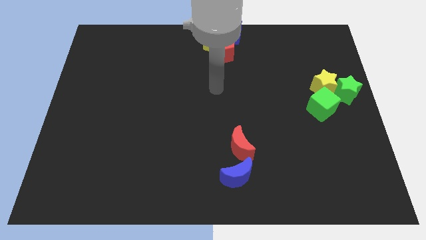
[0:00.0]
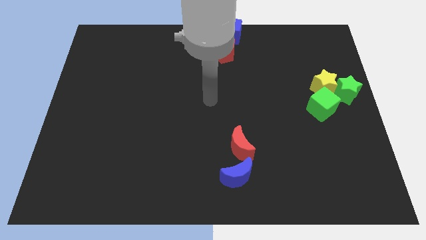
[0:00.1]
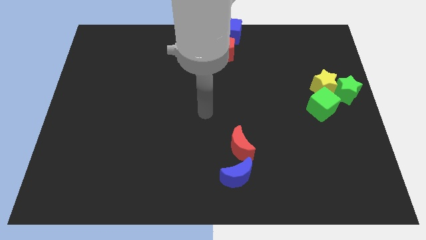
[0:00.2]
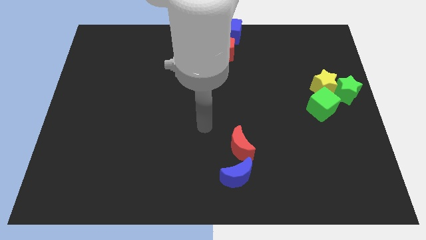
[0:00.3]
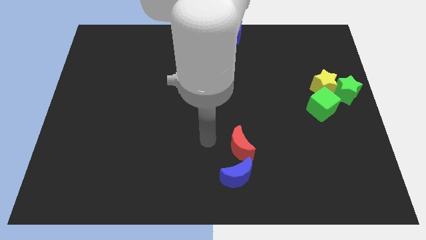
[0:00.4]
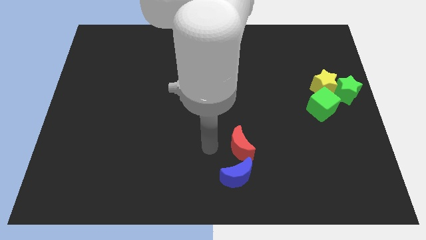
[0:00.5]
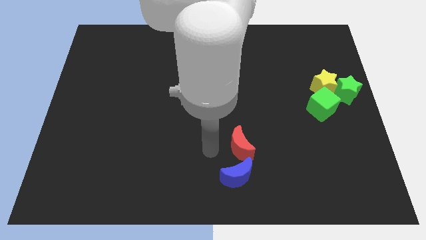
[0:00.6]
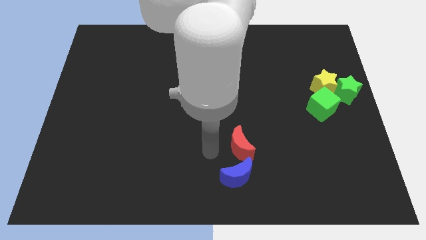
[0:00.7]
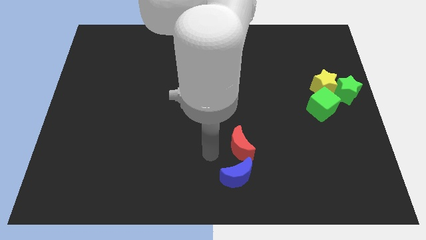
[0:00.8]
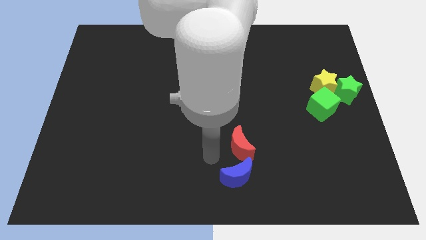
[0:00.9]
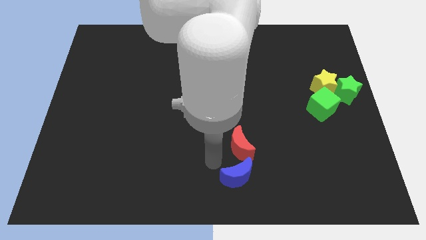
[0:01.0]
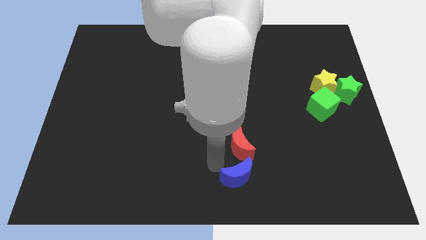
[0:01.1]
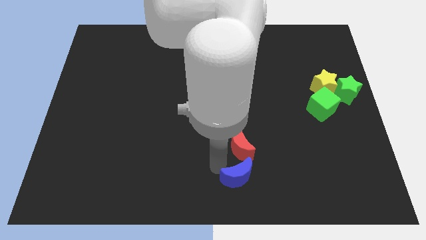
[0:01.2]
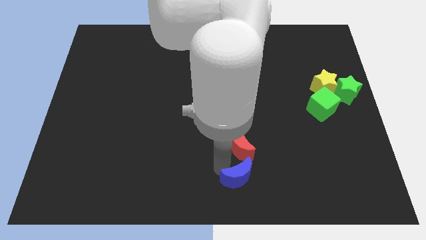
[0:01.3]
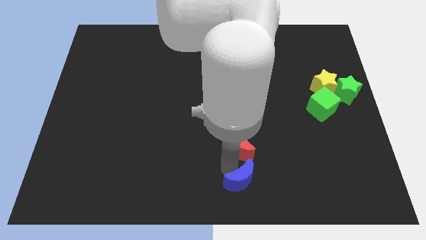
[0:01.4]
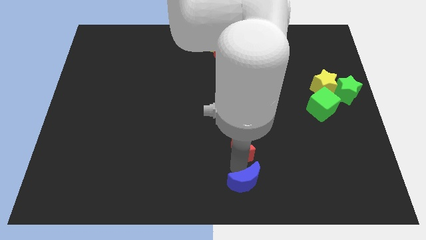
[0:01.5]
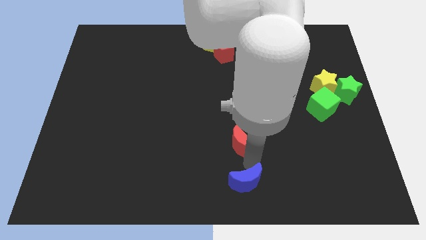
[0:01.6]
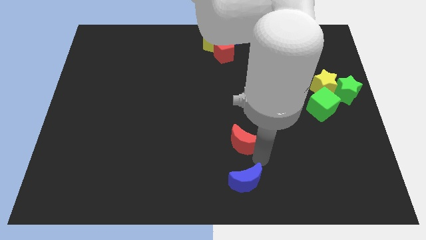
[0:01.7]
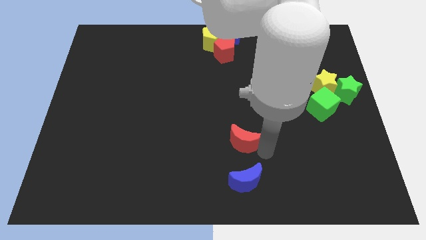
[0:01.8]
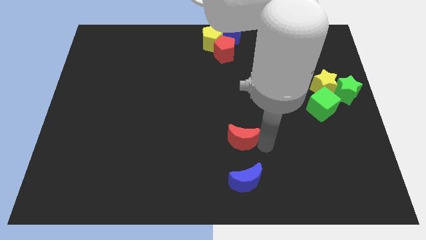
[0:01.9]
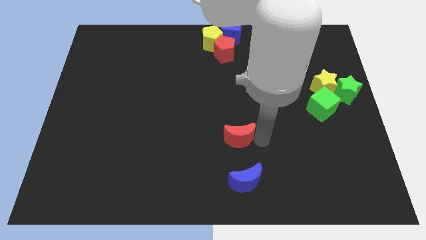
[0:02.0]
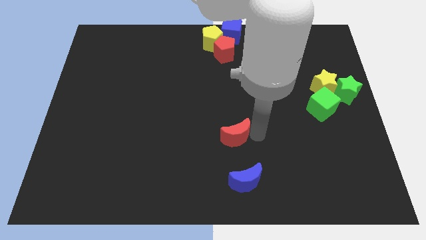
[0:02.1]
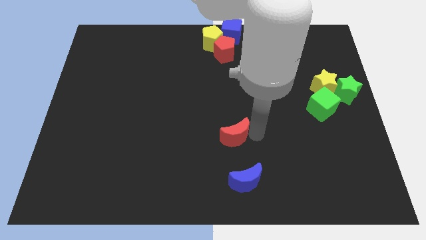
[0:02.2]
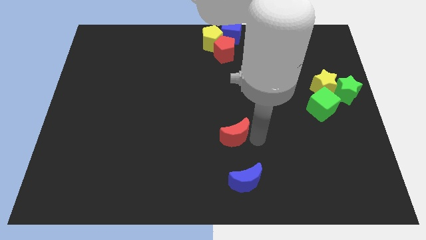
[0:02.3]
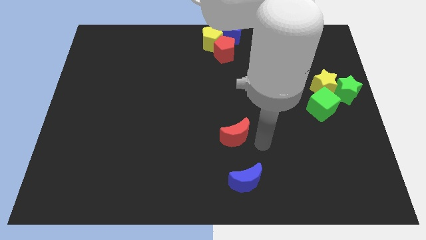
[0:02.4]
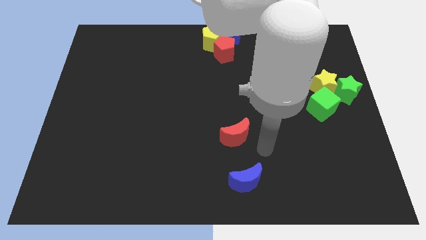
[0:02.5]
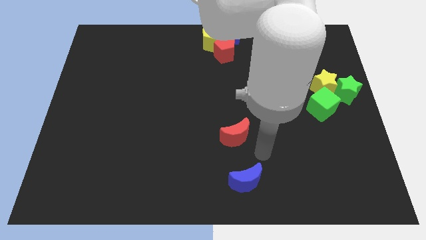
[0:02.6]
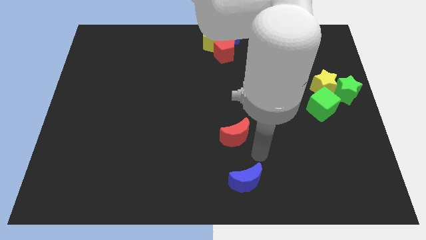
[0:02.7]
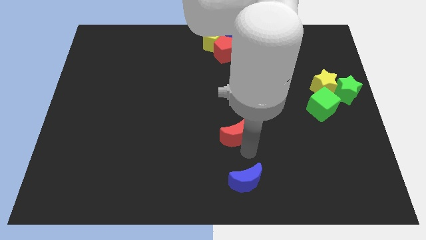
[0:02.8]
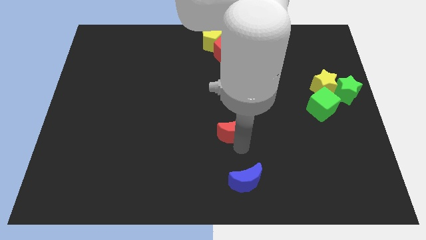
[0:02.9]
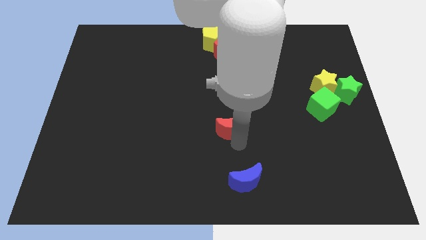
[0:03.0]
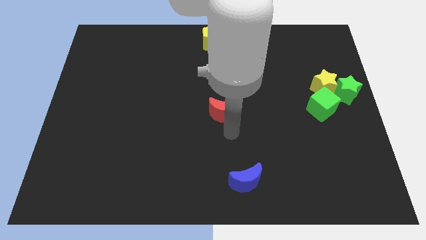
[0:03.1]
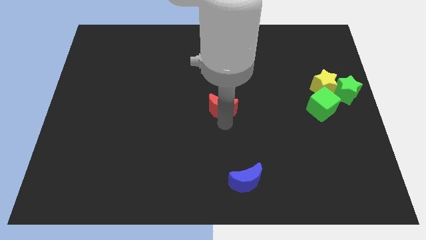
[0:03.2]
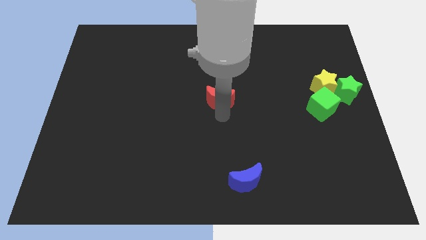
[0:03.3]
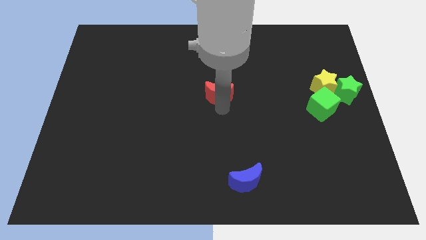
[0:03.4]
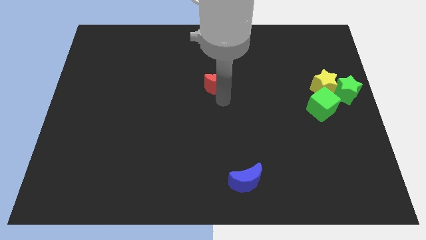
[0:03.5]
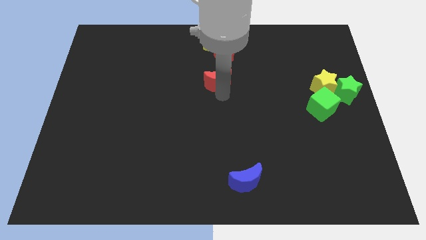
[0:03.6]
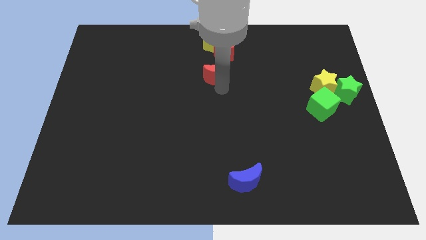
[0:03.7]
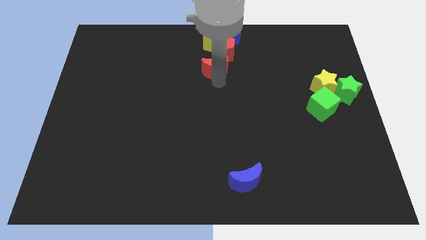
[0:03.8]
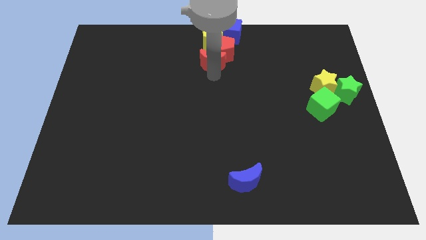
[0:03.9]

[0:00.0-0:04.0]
move the red crescent towards up

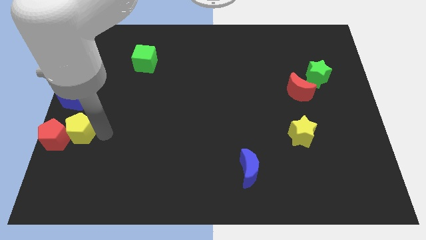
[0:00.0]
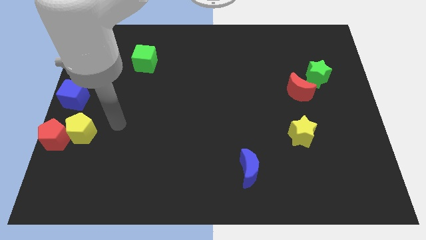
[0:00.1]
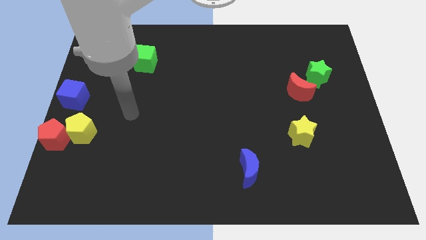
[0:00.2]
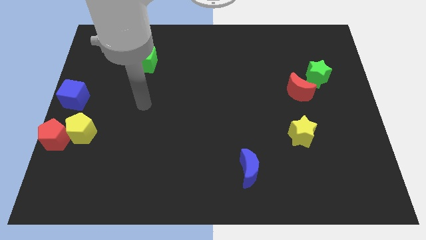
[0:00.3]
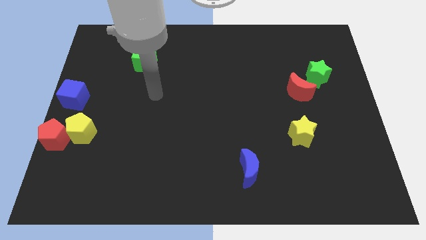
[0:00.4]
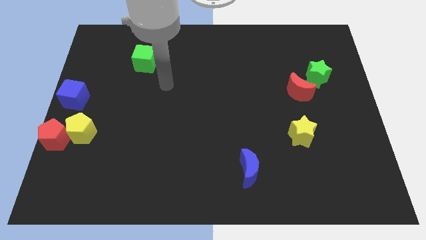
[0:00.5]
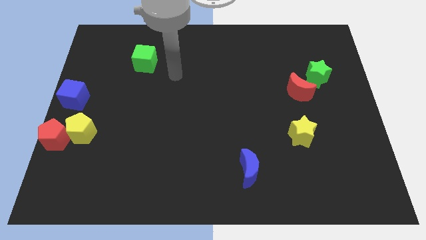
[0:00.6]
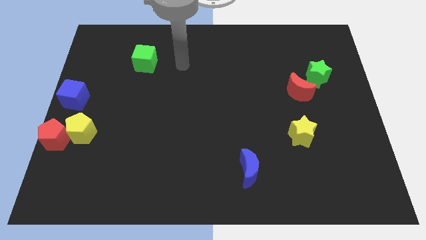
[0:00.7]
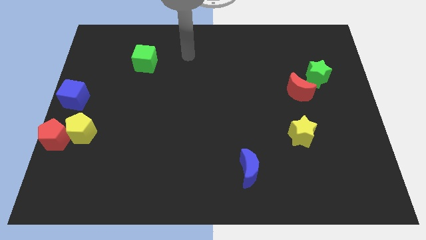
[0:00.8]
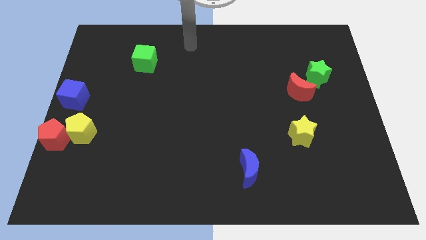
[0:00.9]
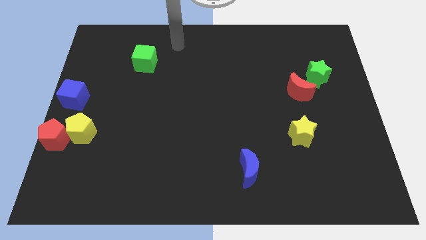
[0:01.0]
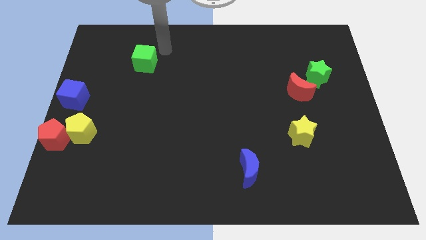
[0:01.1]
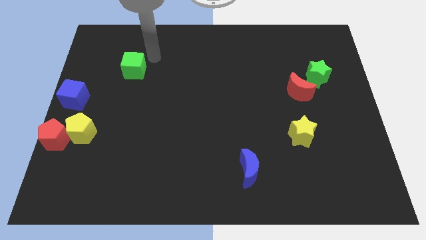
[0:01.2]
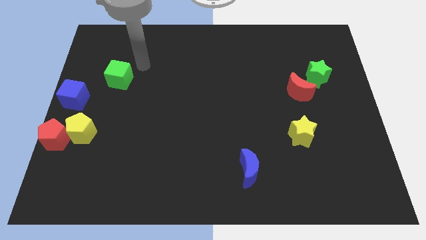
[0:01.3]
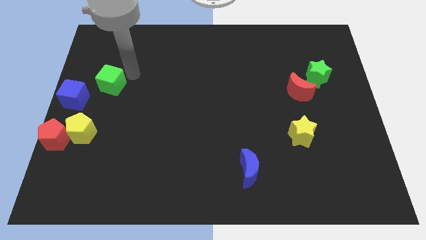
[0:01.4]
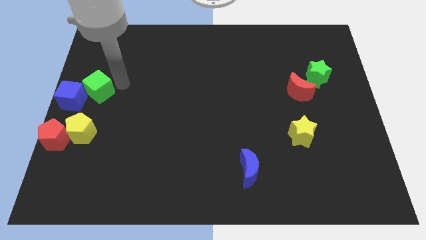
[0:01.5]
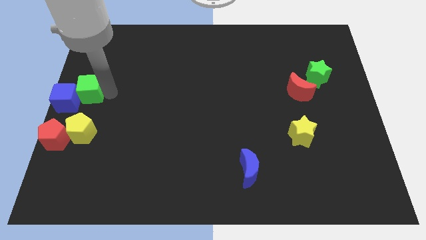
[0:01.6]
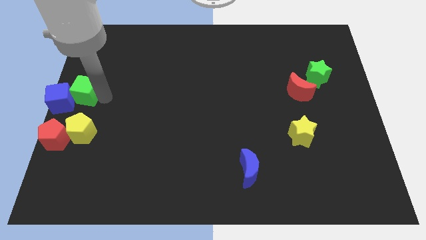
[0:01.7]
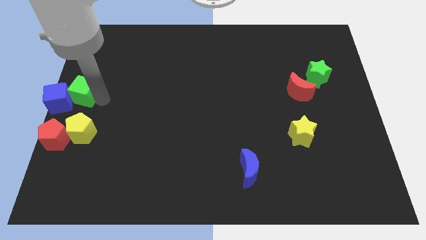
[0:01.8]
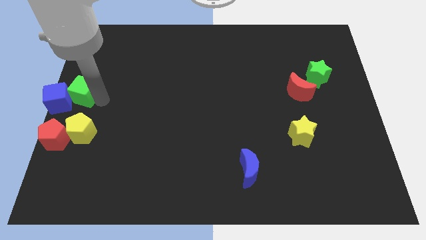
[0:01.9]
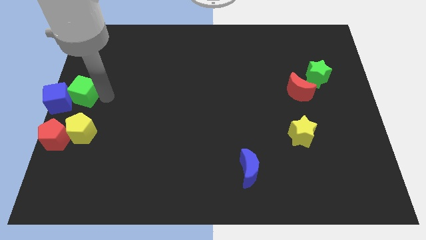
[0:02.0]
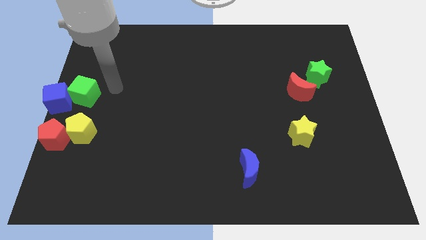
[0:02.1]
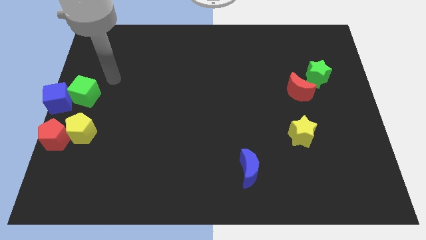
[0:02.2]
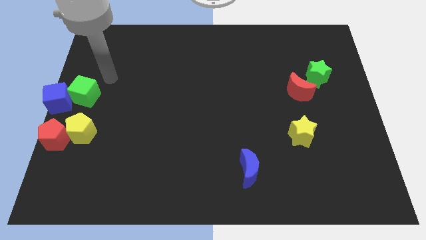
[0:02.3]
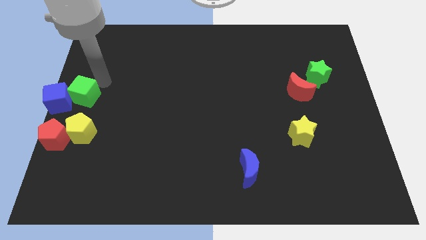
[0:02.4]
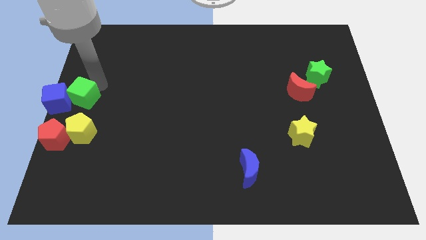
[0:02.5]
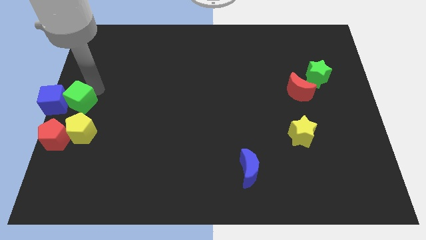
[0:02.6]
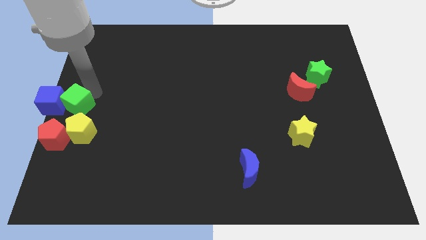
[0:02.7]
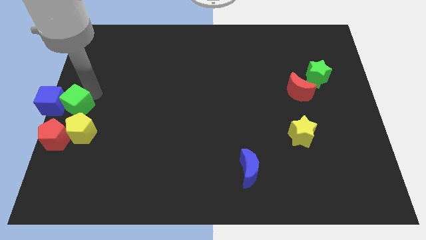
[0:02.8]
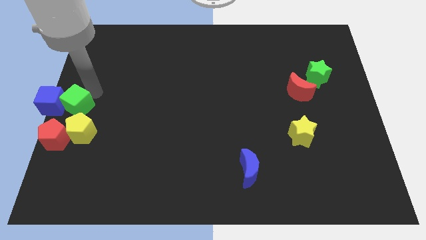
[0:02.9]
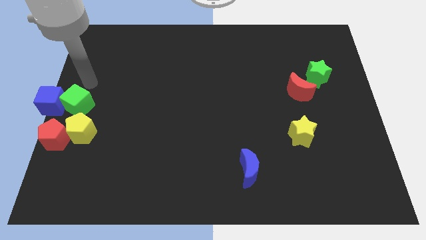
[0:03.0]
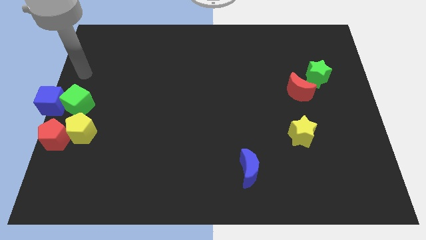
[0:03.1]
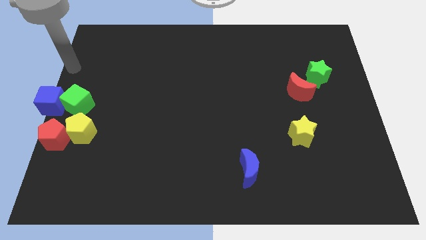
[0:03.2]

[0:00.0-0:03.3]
place the green cube into blue cube at the left side

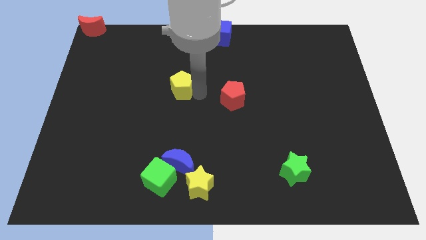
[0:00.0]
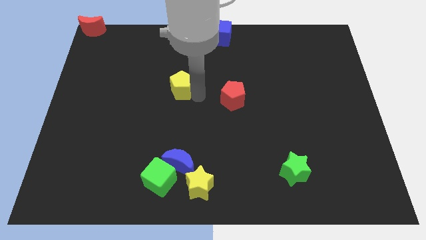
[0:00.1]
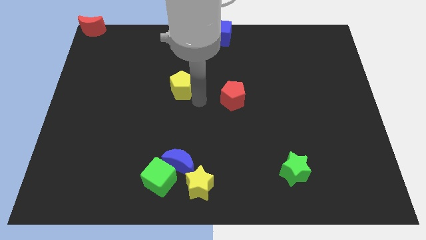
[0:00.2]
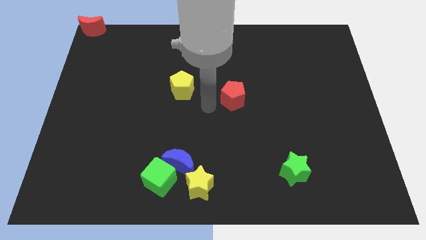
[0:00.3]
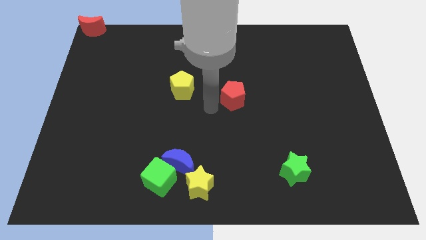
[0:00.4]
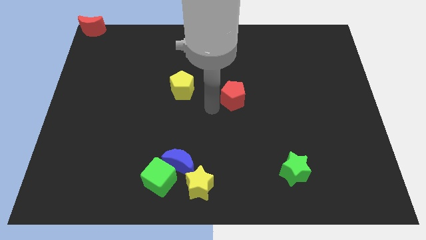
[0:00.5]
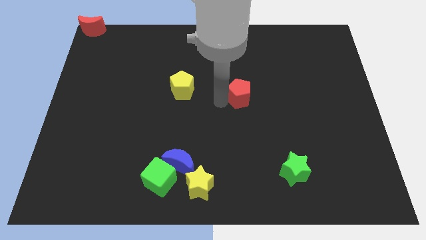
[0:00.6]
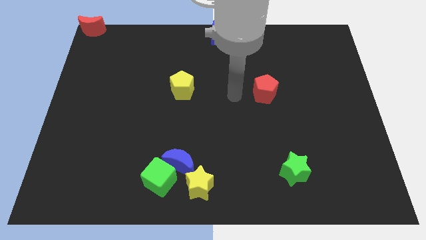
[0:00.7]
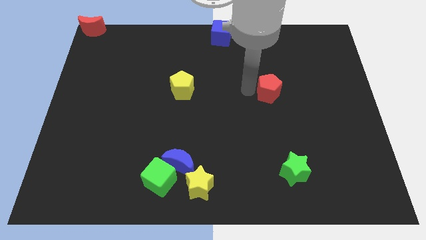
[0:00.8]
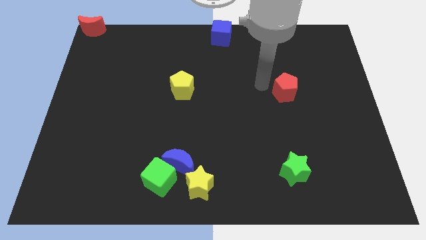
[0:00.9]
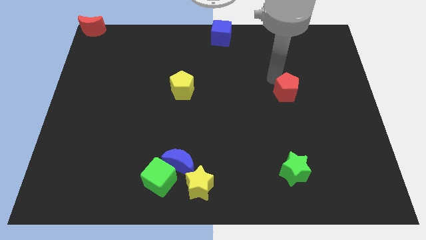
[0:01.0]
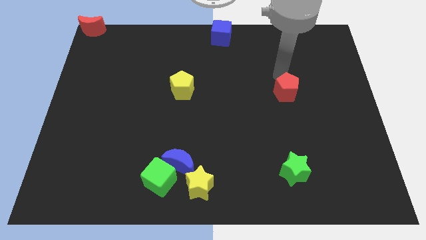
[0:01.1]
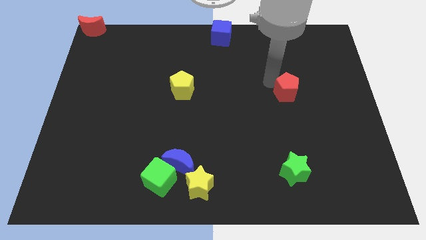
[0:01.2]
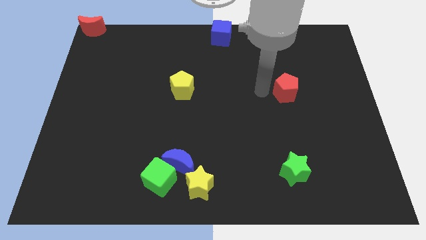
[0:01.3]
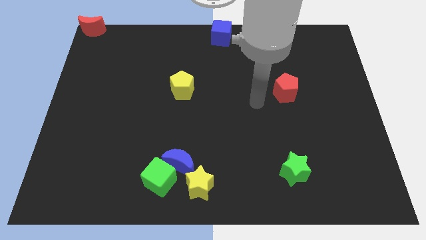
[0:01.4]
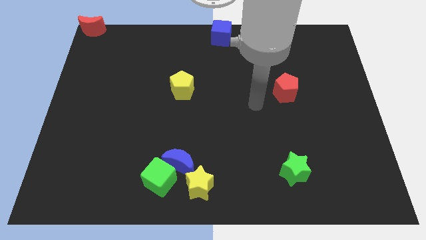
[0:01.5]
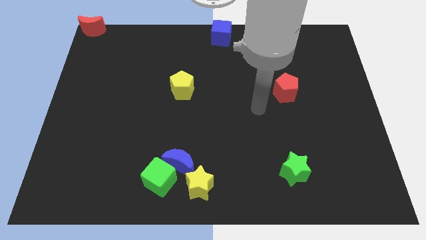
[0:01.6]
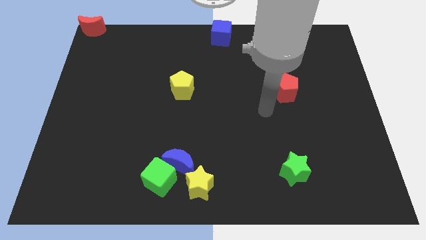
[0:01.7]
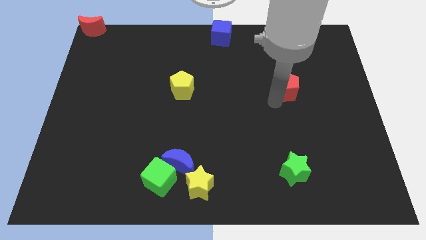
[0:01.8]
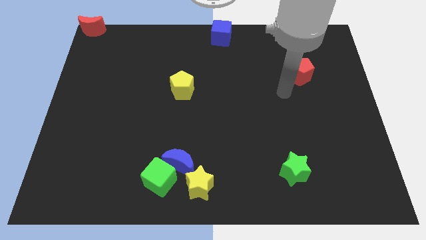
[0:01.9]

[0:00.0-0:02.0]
move the red pentagon to the top of the green star
